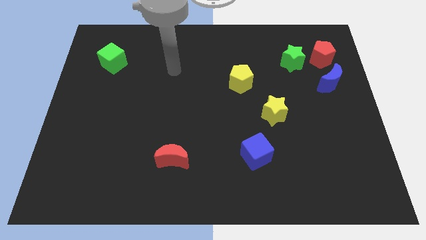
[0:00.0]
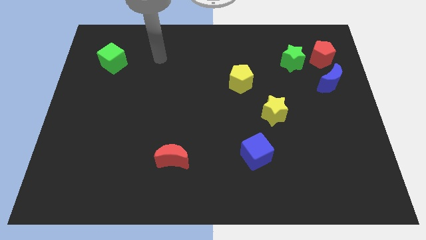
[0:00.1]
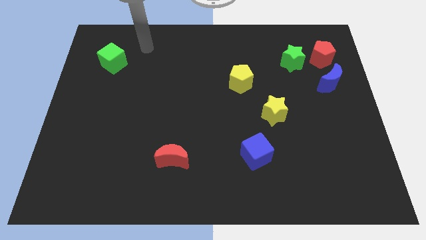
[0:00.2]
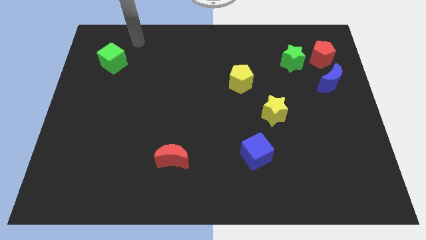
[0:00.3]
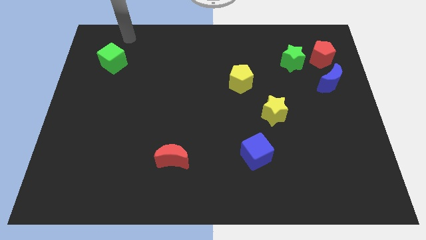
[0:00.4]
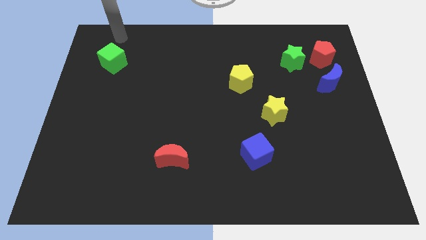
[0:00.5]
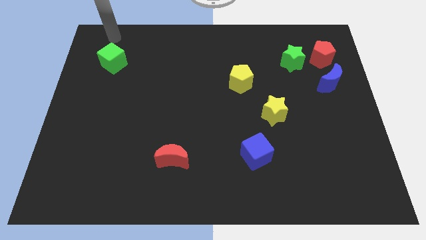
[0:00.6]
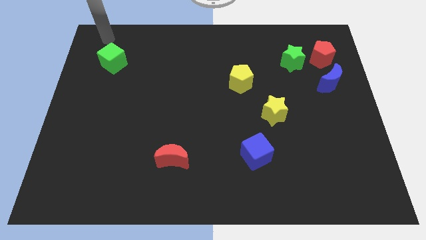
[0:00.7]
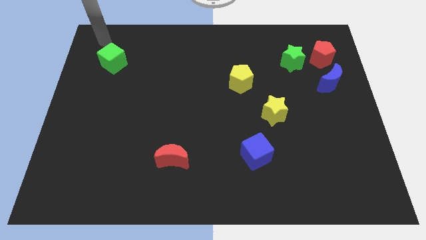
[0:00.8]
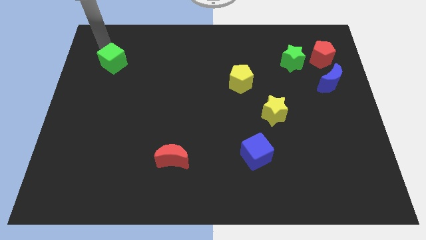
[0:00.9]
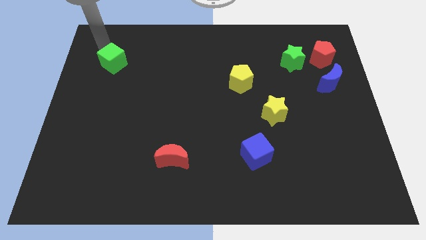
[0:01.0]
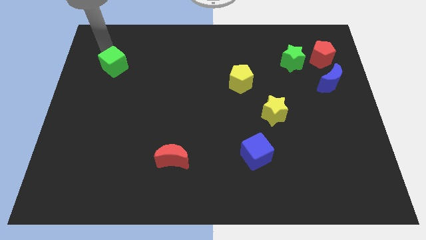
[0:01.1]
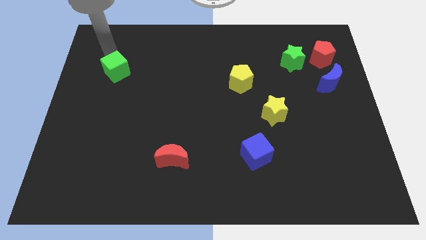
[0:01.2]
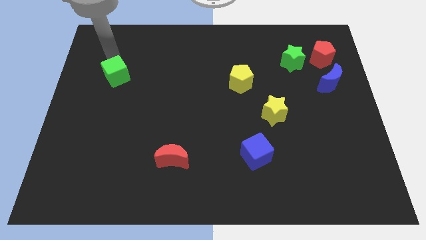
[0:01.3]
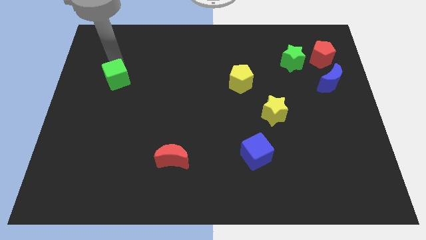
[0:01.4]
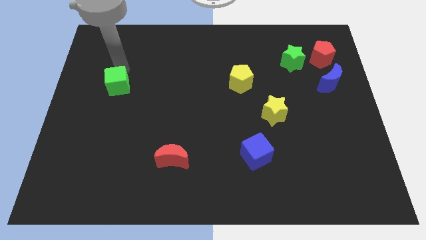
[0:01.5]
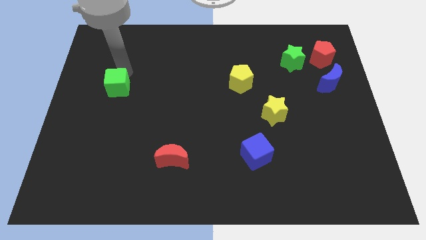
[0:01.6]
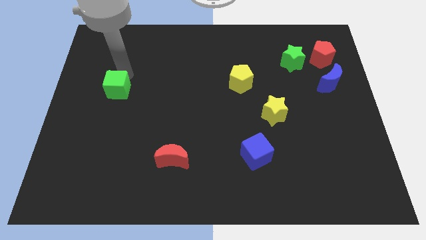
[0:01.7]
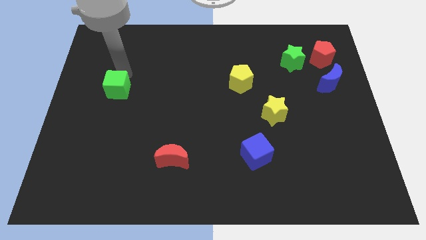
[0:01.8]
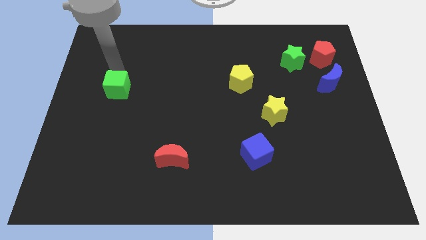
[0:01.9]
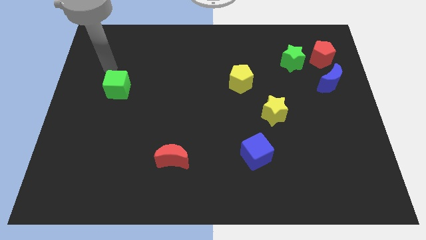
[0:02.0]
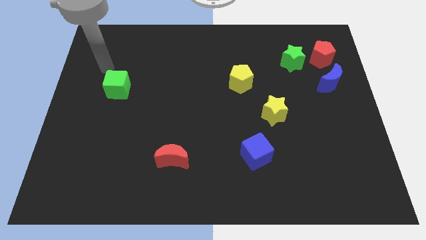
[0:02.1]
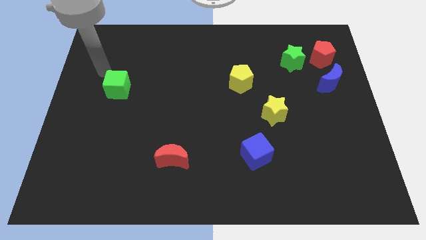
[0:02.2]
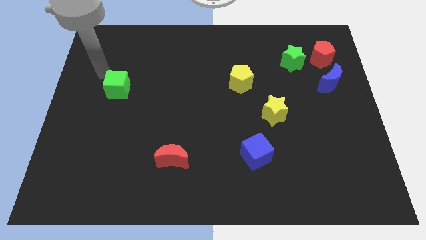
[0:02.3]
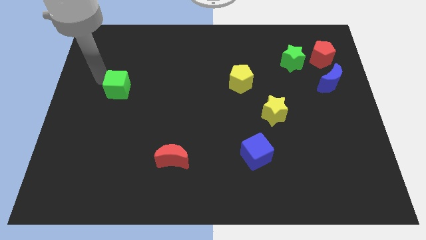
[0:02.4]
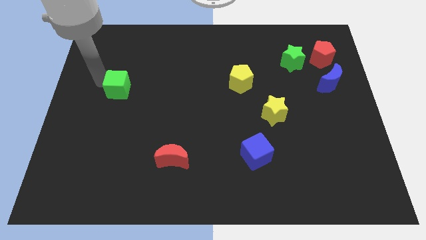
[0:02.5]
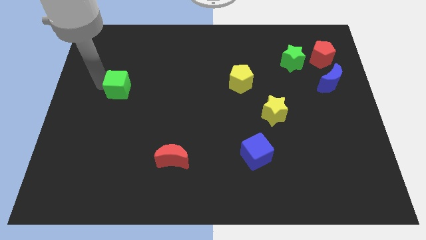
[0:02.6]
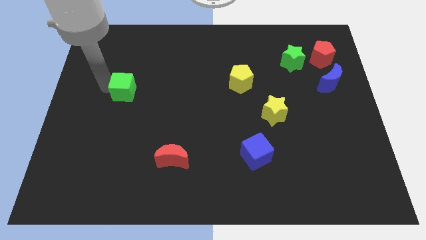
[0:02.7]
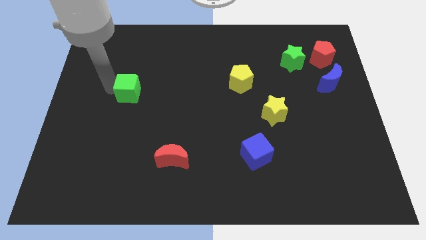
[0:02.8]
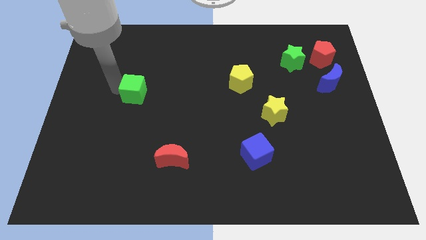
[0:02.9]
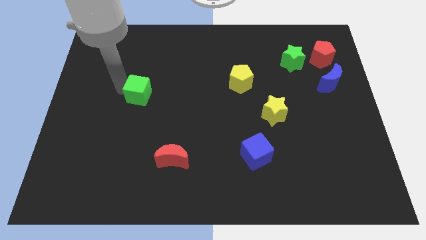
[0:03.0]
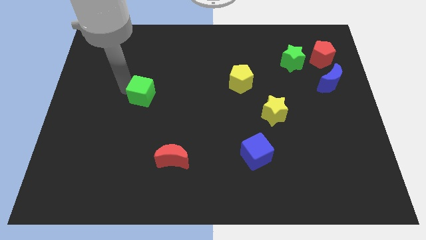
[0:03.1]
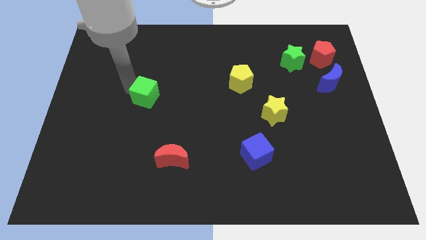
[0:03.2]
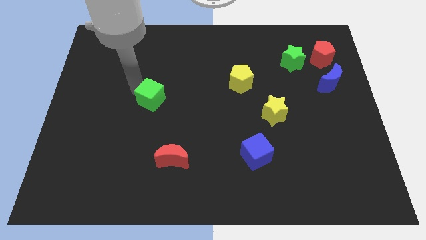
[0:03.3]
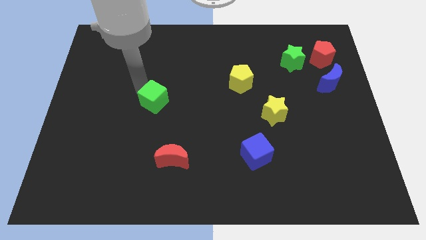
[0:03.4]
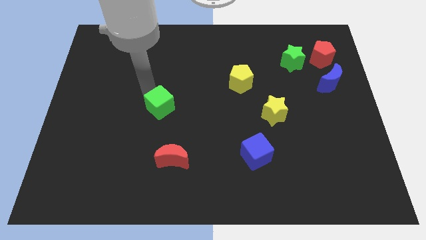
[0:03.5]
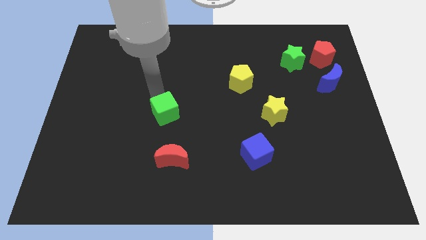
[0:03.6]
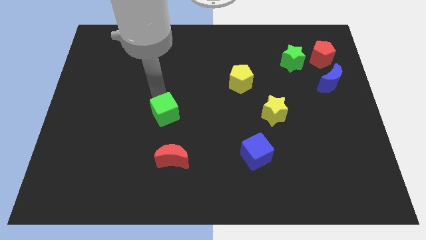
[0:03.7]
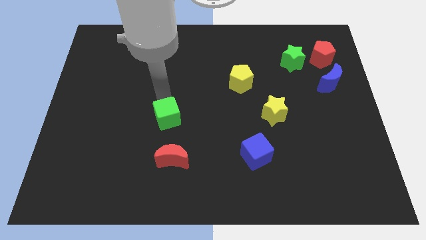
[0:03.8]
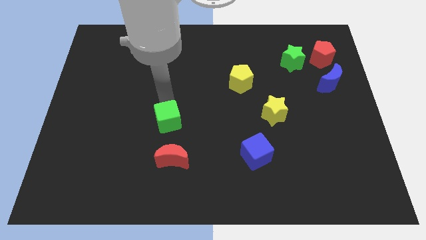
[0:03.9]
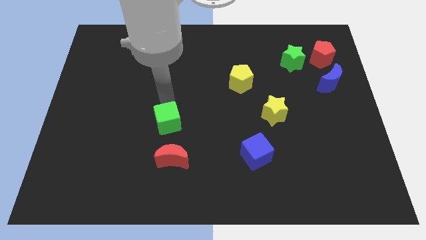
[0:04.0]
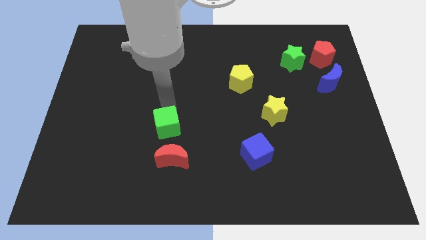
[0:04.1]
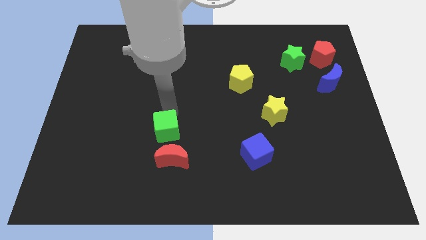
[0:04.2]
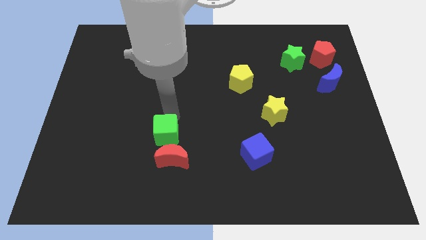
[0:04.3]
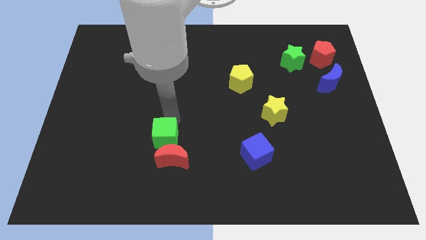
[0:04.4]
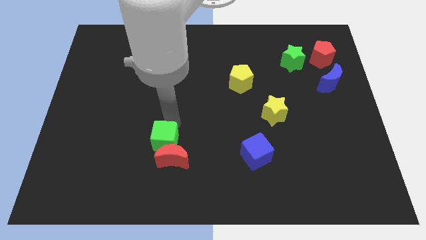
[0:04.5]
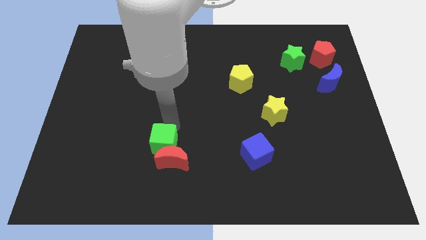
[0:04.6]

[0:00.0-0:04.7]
slide the green cube to the red moon

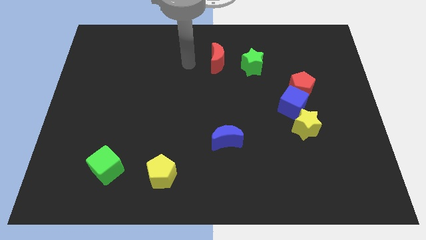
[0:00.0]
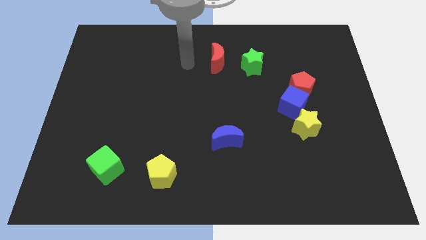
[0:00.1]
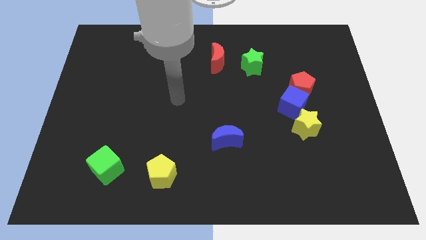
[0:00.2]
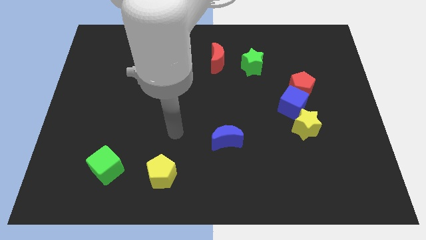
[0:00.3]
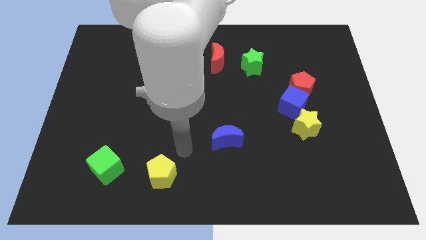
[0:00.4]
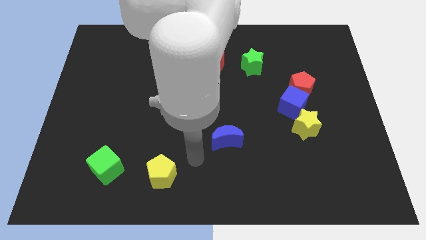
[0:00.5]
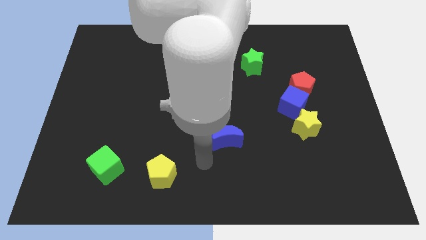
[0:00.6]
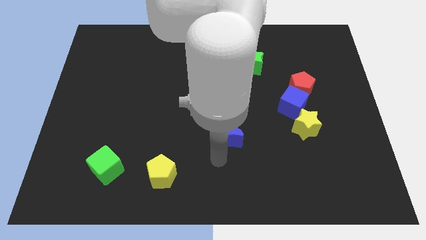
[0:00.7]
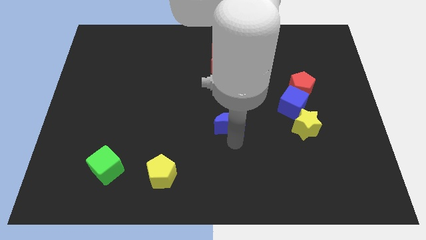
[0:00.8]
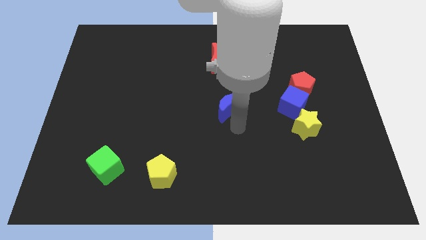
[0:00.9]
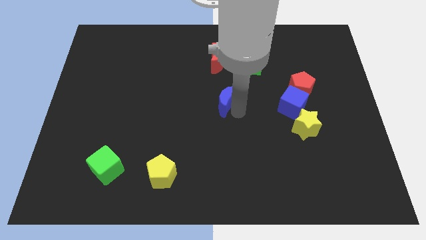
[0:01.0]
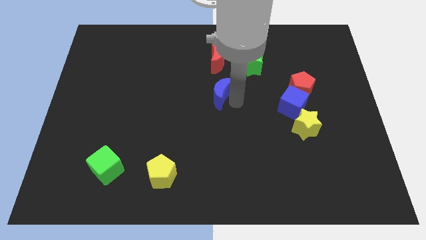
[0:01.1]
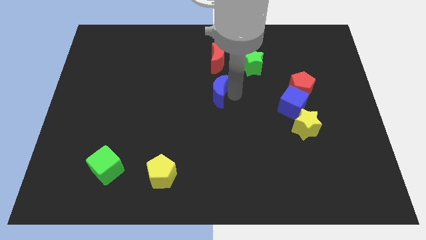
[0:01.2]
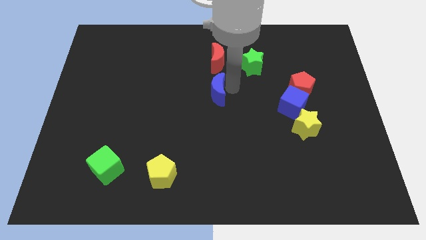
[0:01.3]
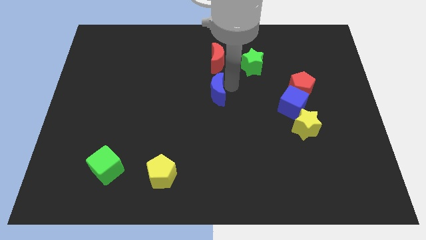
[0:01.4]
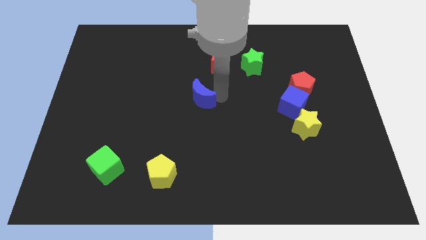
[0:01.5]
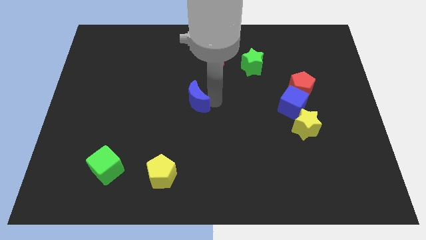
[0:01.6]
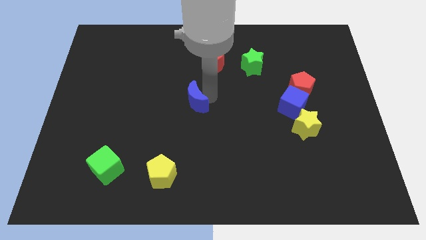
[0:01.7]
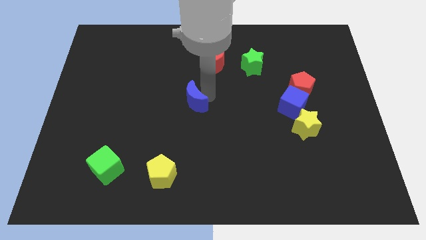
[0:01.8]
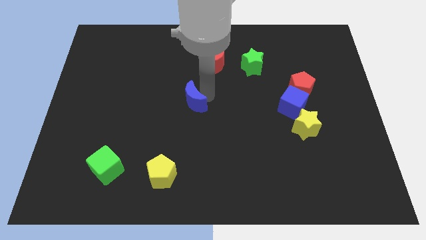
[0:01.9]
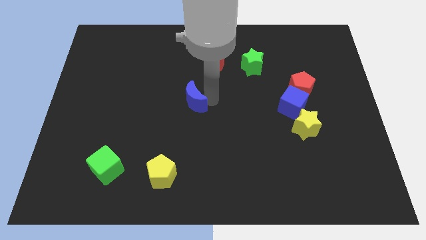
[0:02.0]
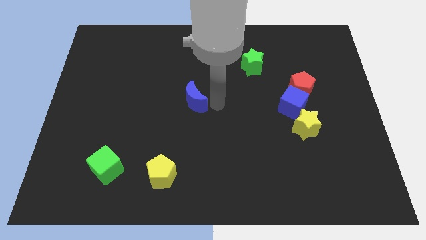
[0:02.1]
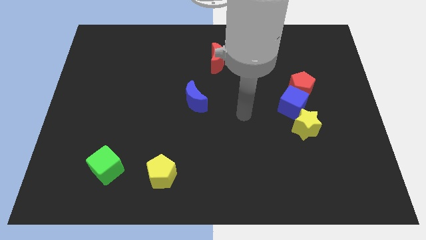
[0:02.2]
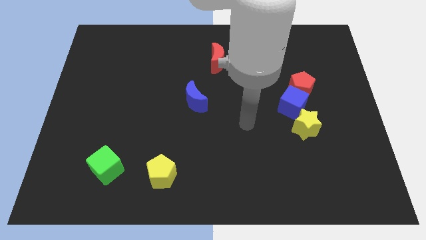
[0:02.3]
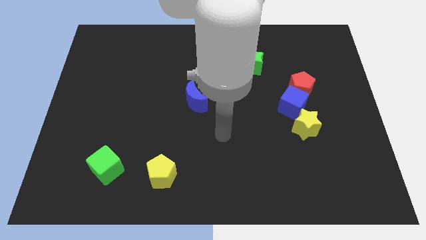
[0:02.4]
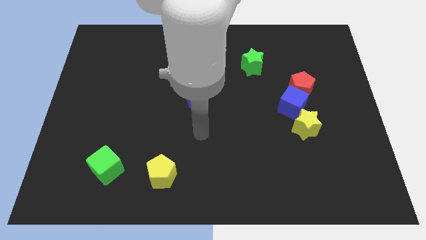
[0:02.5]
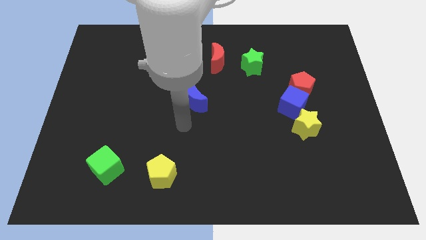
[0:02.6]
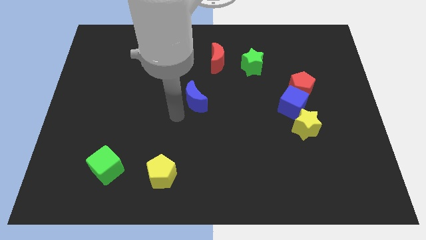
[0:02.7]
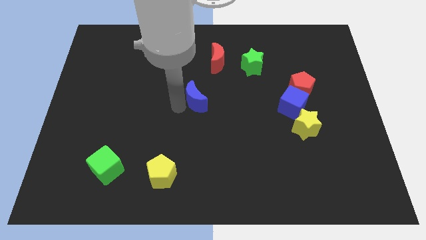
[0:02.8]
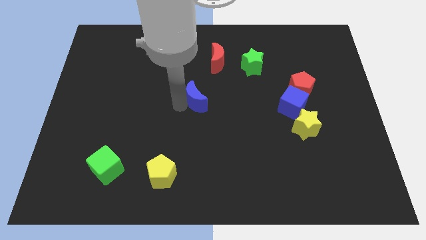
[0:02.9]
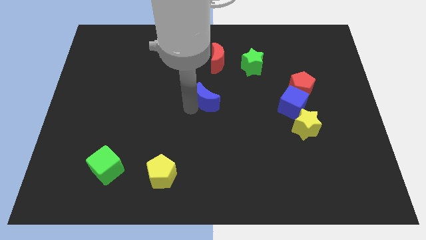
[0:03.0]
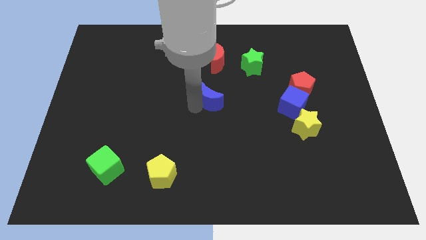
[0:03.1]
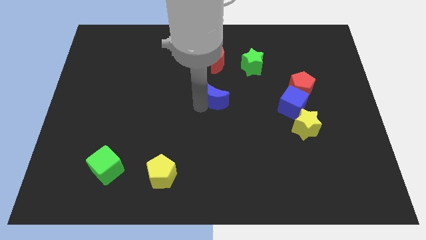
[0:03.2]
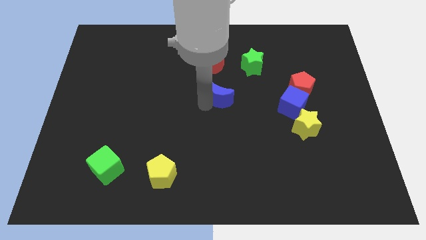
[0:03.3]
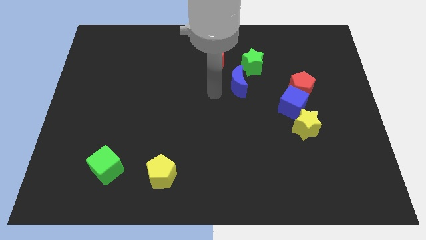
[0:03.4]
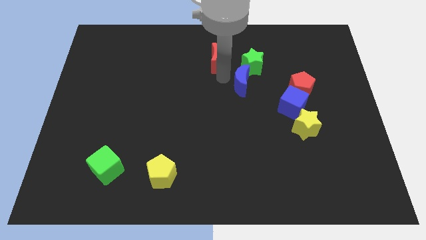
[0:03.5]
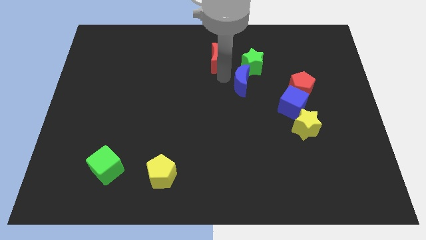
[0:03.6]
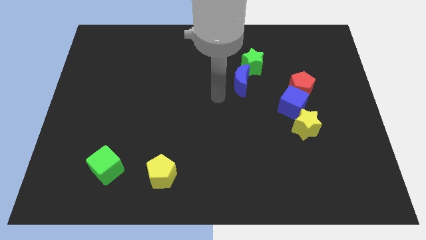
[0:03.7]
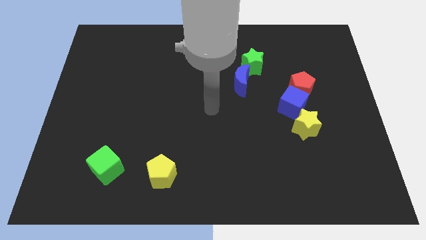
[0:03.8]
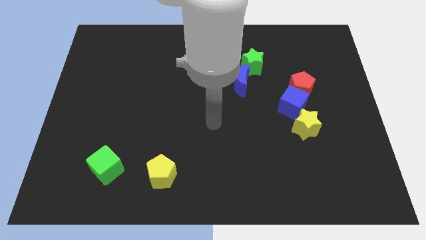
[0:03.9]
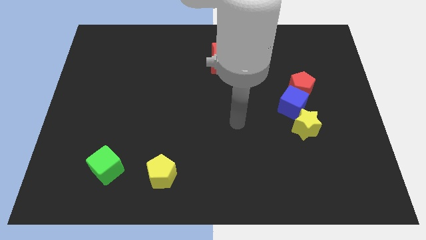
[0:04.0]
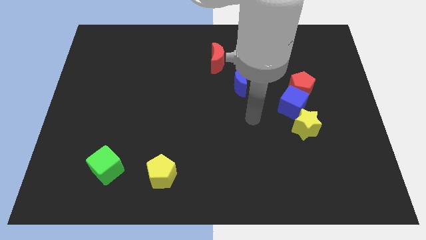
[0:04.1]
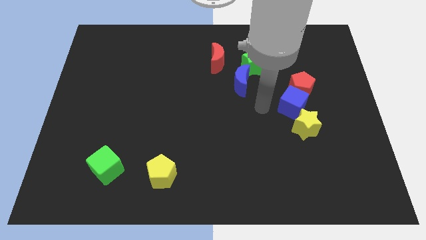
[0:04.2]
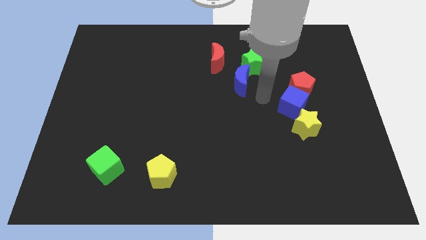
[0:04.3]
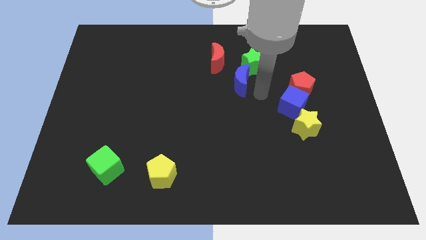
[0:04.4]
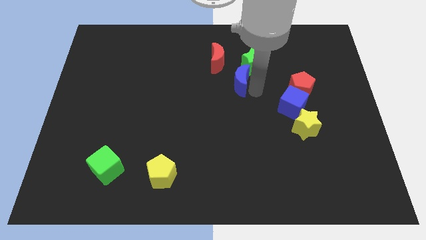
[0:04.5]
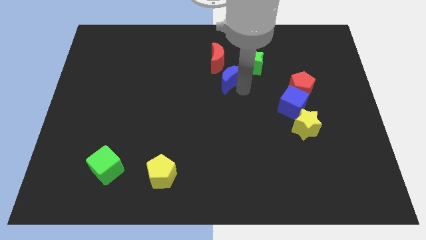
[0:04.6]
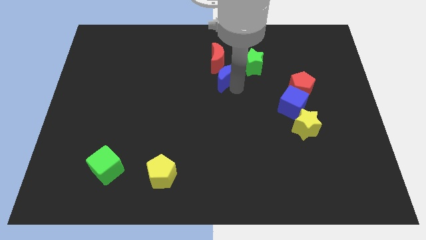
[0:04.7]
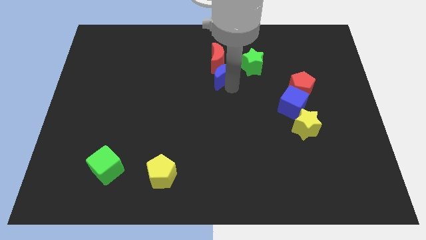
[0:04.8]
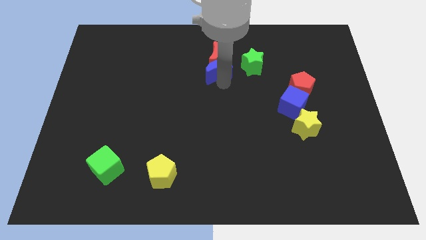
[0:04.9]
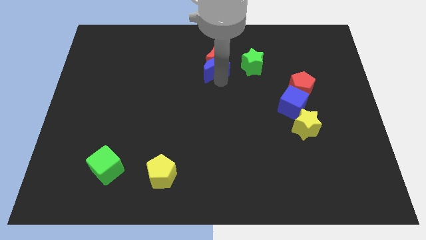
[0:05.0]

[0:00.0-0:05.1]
slide the blue moon close to the red moon
